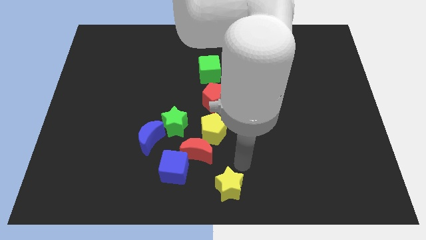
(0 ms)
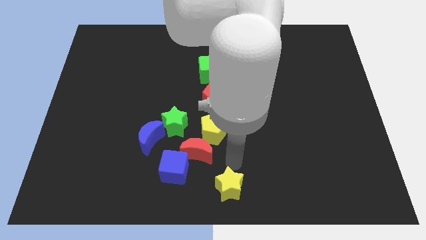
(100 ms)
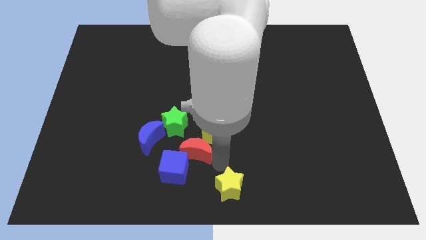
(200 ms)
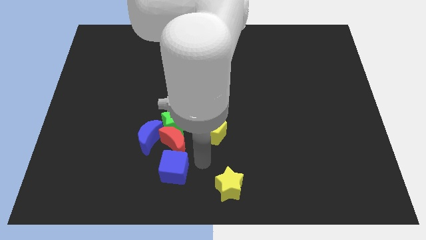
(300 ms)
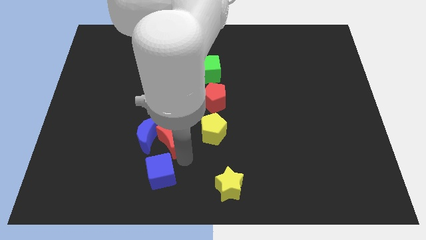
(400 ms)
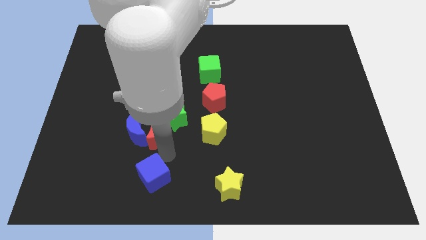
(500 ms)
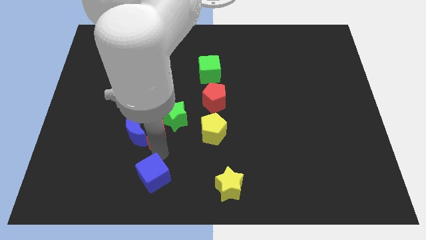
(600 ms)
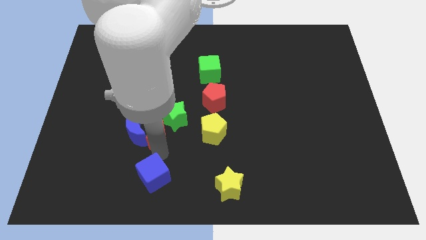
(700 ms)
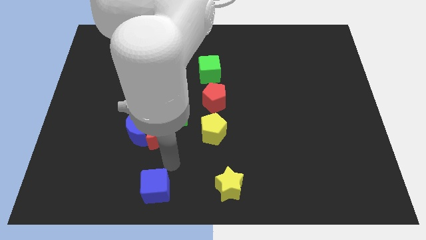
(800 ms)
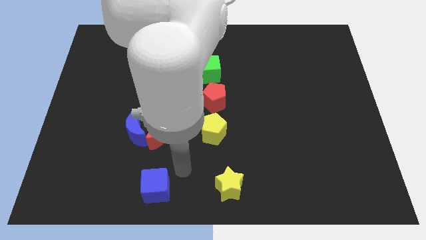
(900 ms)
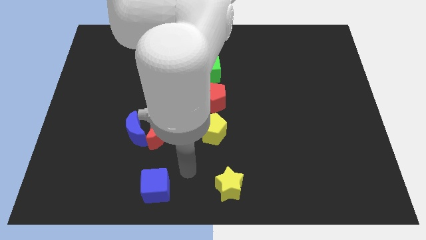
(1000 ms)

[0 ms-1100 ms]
separate the blue cube from red crescent

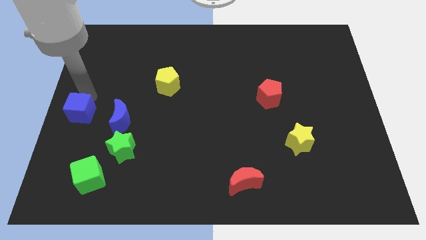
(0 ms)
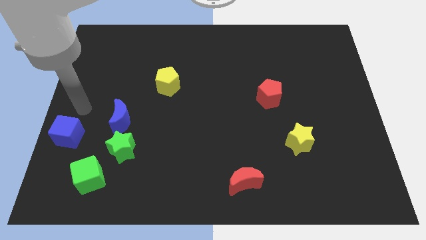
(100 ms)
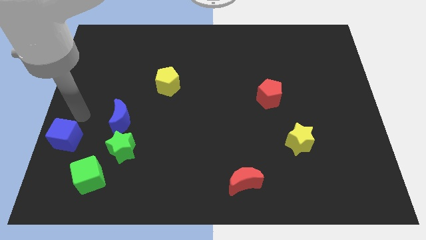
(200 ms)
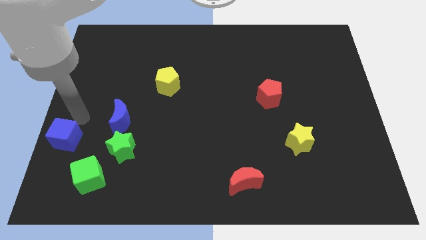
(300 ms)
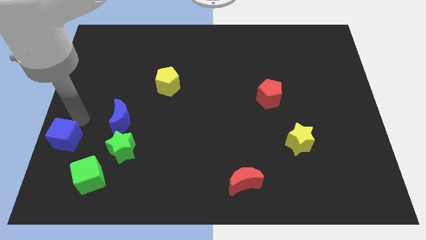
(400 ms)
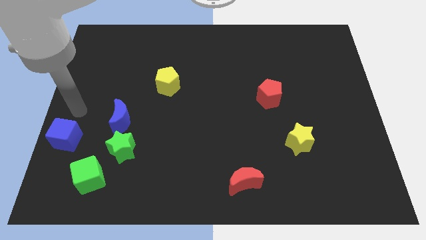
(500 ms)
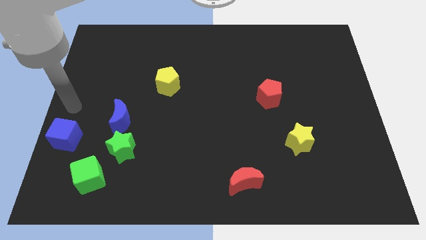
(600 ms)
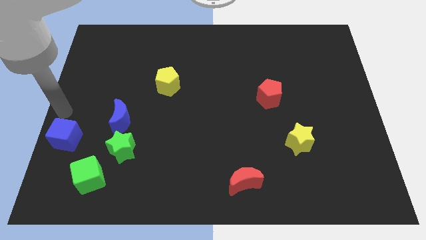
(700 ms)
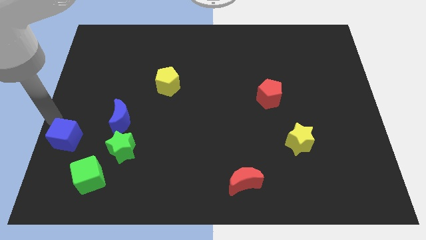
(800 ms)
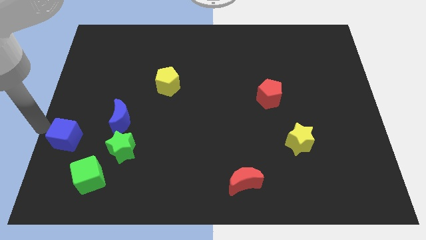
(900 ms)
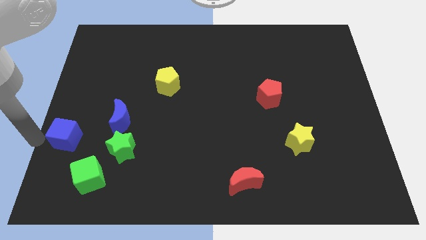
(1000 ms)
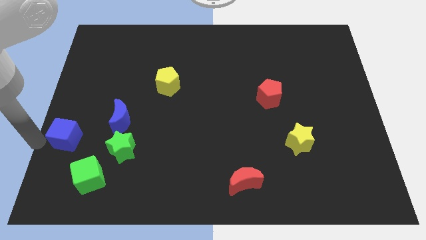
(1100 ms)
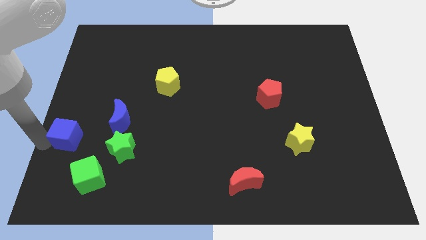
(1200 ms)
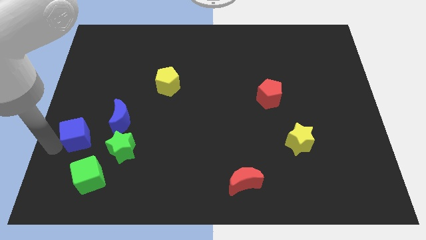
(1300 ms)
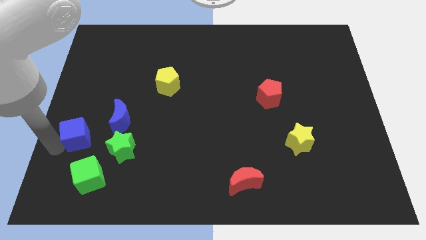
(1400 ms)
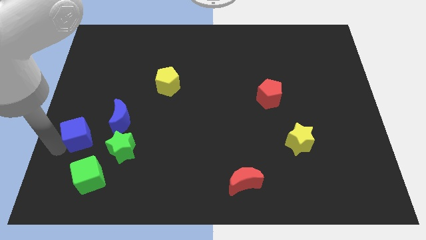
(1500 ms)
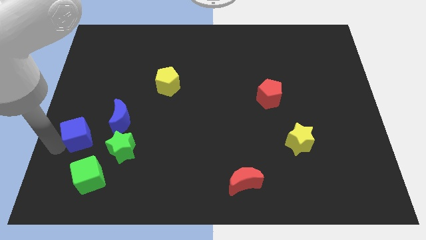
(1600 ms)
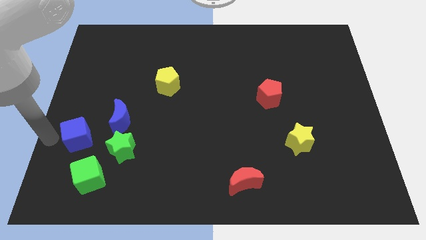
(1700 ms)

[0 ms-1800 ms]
move blue cube near the green cube

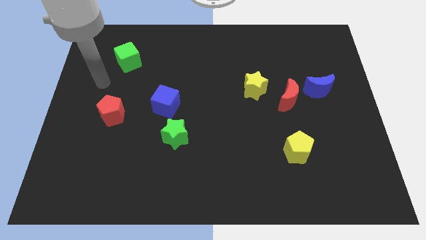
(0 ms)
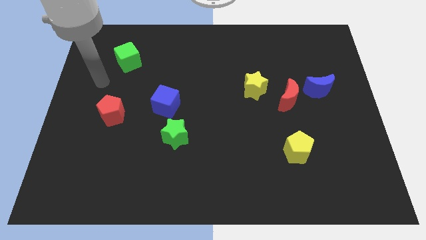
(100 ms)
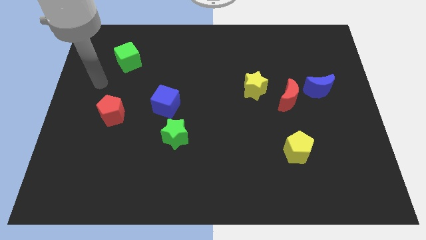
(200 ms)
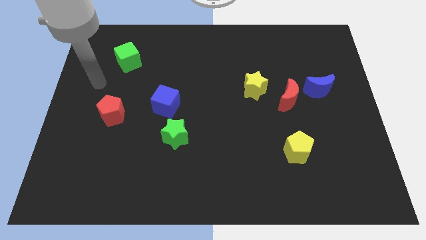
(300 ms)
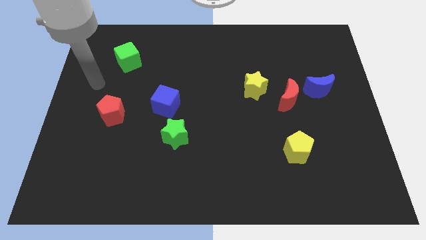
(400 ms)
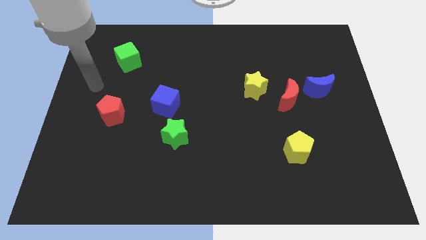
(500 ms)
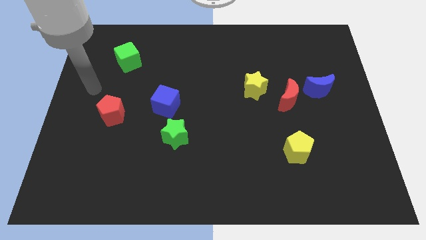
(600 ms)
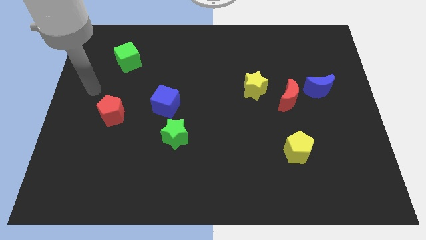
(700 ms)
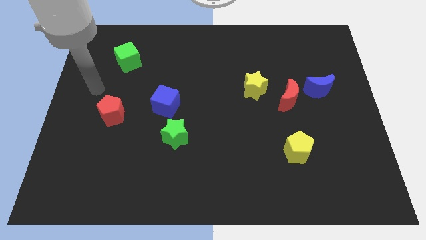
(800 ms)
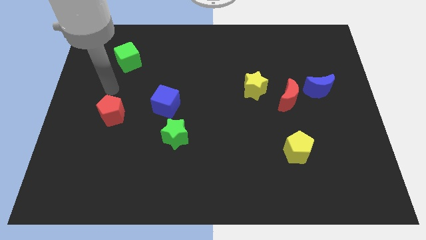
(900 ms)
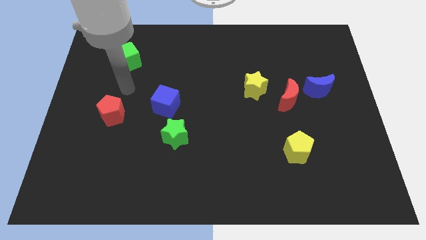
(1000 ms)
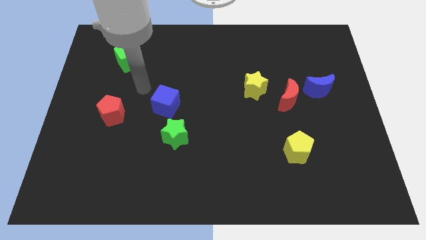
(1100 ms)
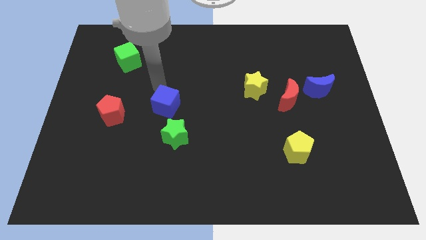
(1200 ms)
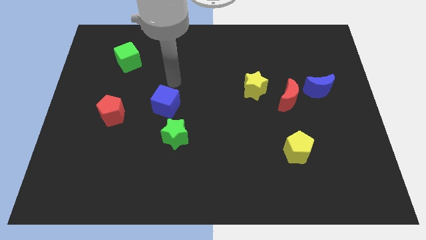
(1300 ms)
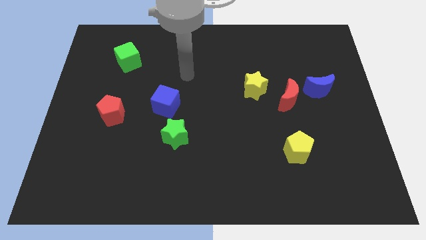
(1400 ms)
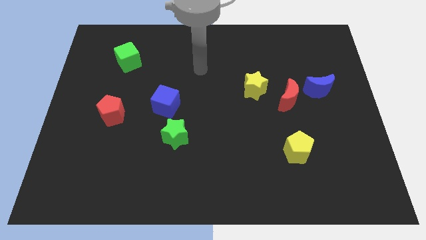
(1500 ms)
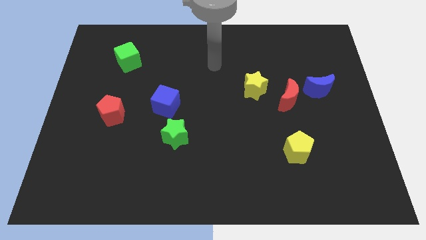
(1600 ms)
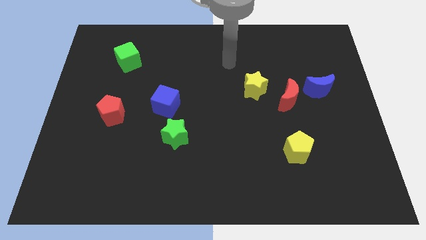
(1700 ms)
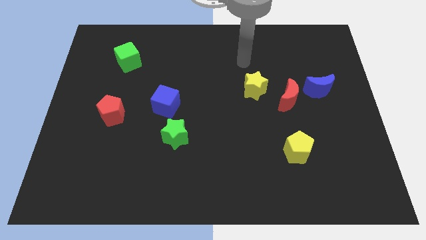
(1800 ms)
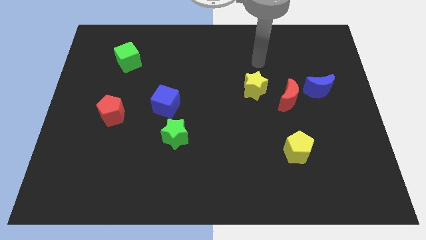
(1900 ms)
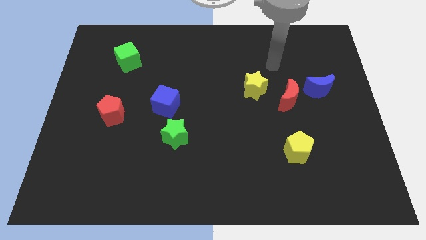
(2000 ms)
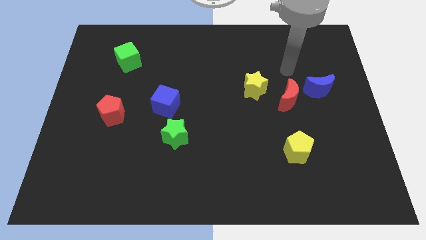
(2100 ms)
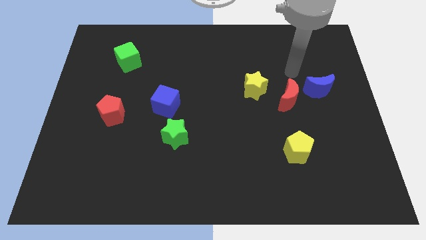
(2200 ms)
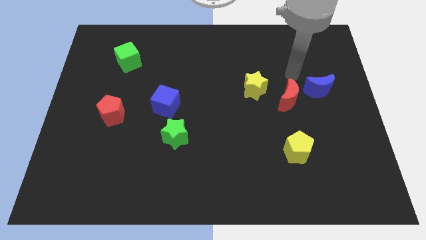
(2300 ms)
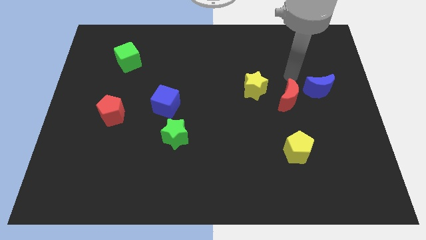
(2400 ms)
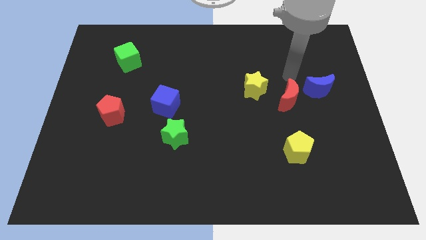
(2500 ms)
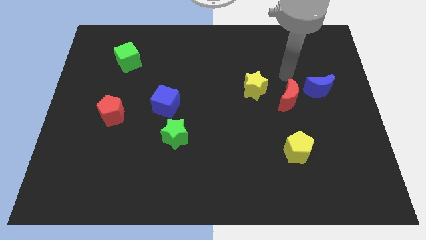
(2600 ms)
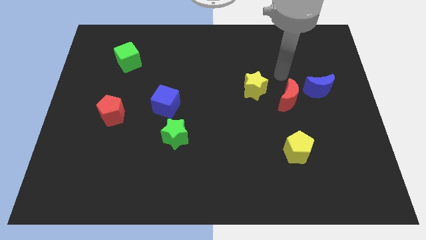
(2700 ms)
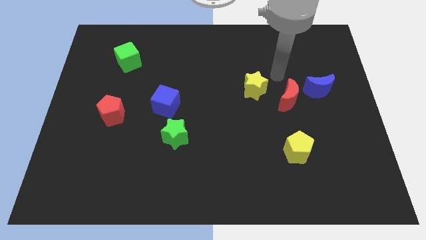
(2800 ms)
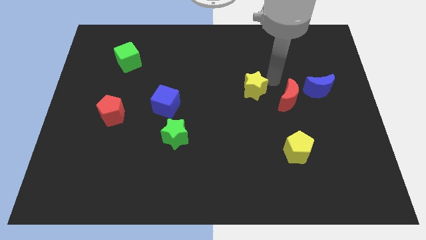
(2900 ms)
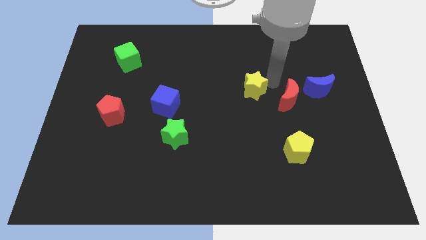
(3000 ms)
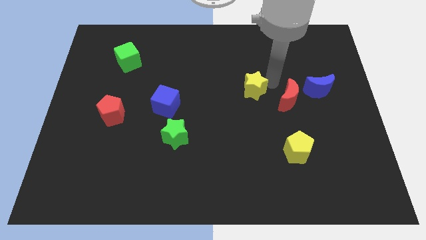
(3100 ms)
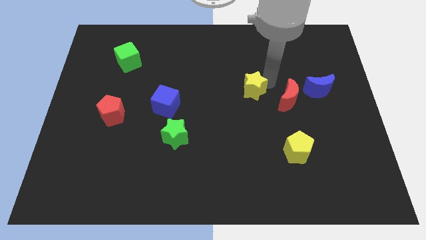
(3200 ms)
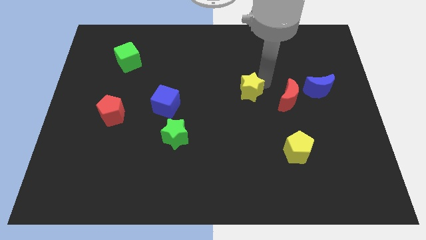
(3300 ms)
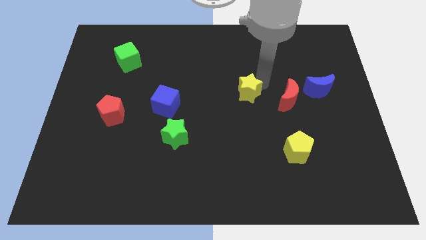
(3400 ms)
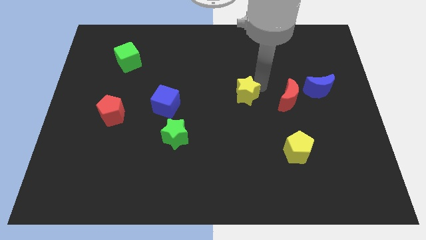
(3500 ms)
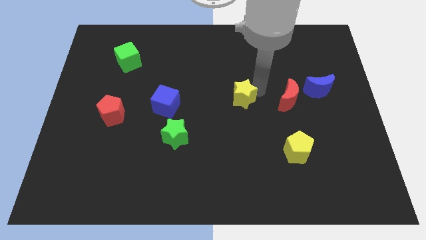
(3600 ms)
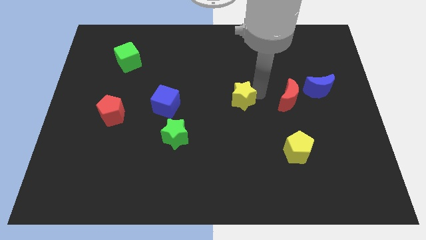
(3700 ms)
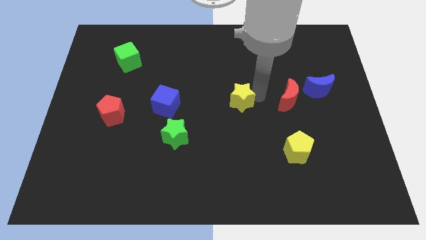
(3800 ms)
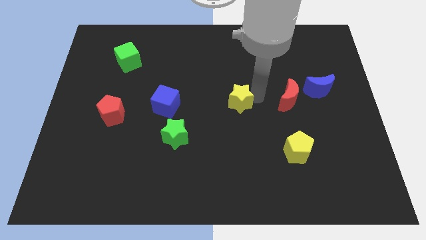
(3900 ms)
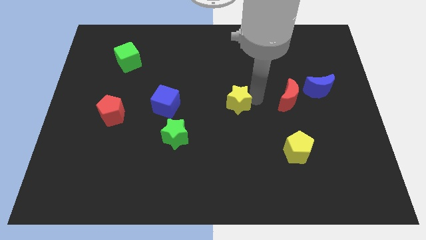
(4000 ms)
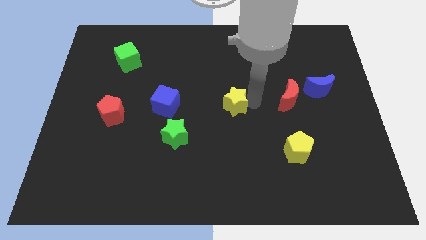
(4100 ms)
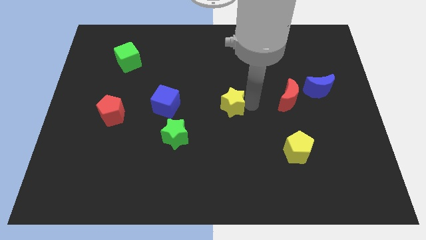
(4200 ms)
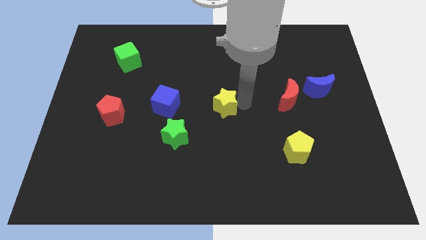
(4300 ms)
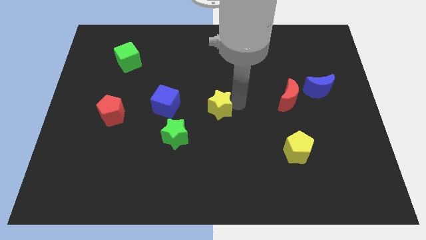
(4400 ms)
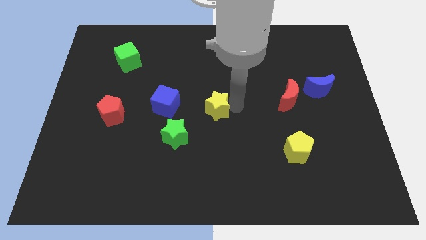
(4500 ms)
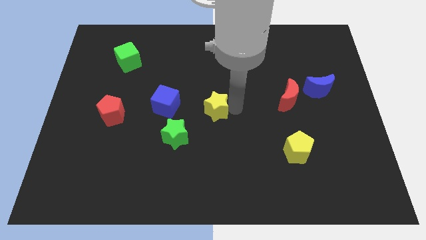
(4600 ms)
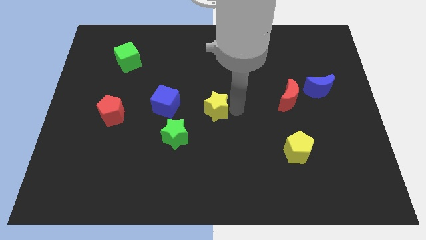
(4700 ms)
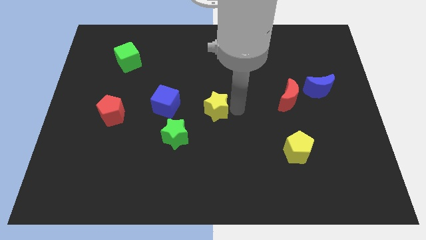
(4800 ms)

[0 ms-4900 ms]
move yellow star diagonally bottom left to the red moon

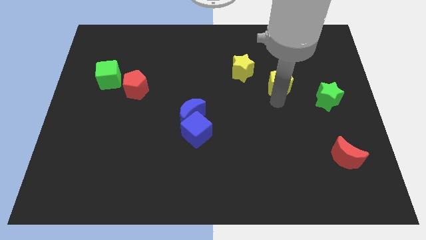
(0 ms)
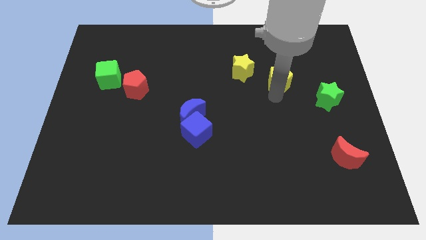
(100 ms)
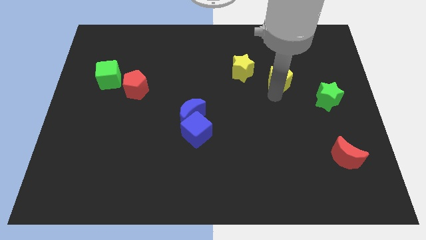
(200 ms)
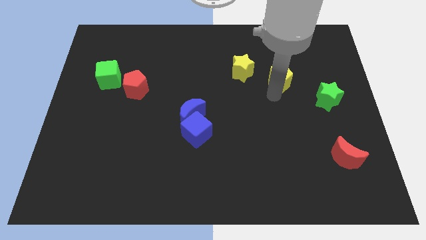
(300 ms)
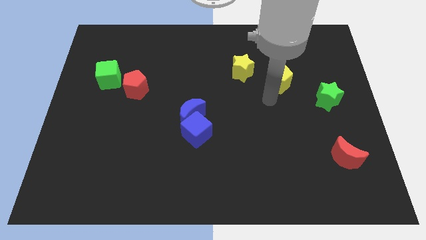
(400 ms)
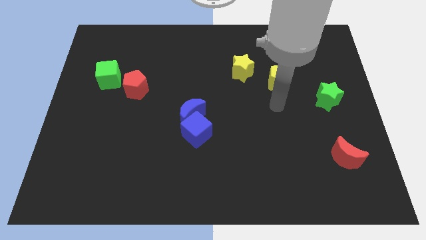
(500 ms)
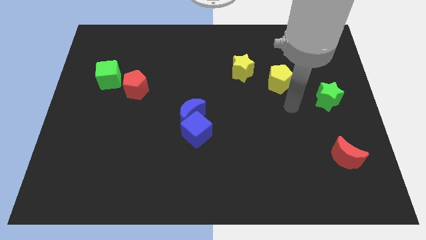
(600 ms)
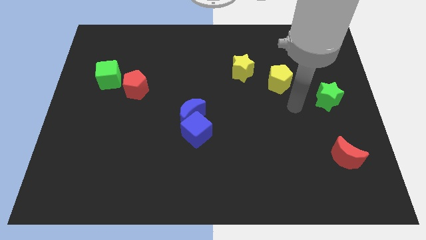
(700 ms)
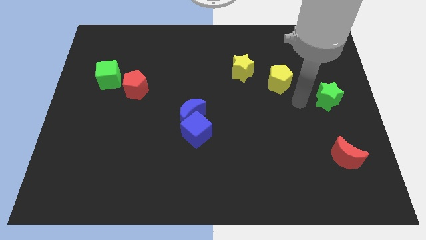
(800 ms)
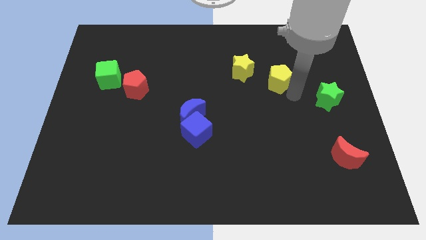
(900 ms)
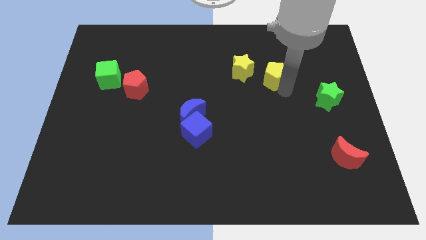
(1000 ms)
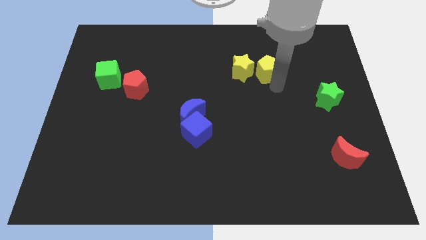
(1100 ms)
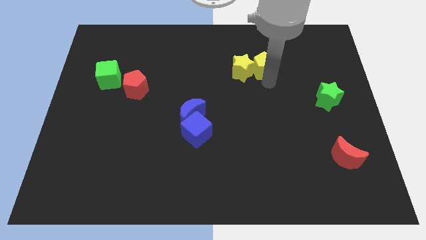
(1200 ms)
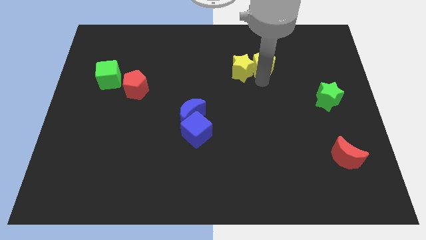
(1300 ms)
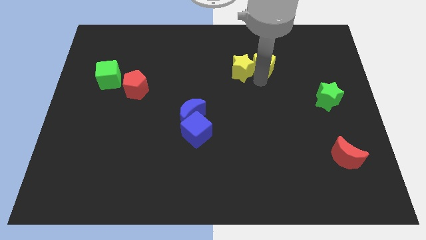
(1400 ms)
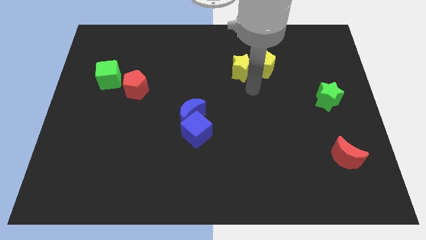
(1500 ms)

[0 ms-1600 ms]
push the yellow pentagon into the yellow star
